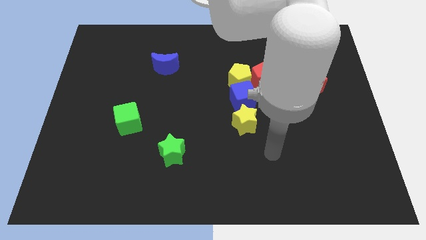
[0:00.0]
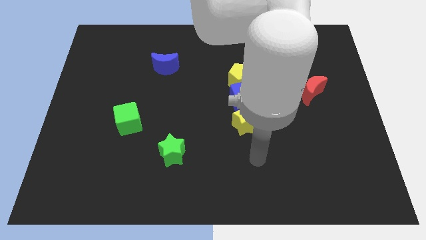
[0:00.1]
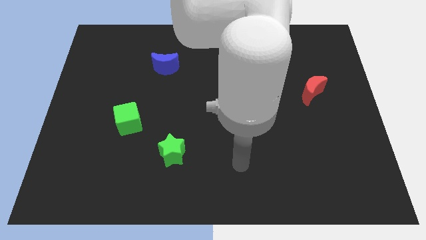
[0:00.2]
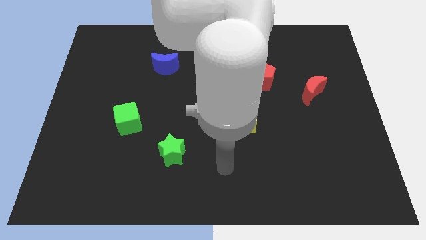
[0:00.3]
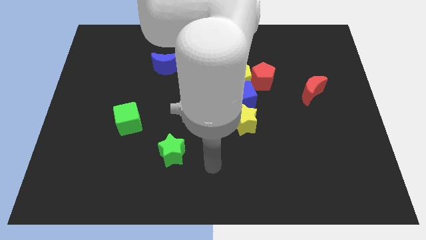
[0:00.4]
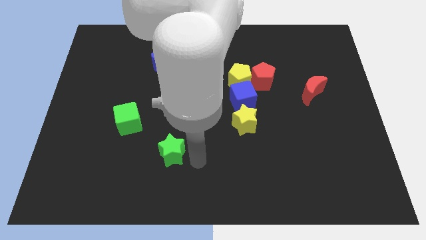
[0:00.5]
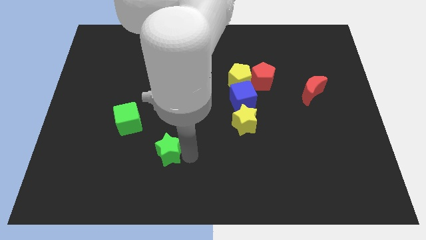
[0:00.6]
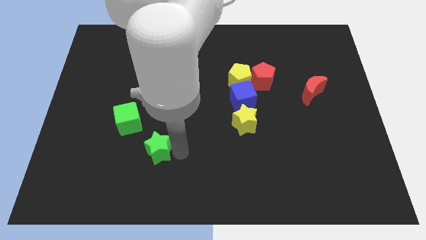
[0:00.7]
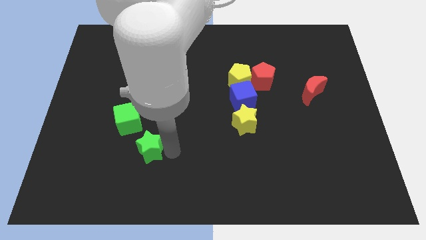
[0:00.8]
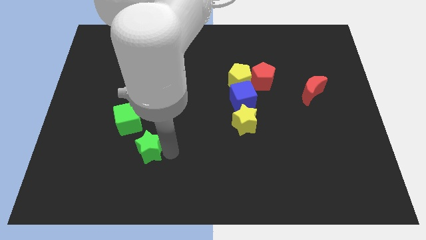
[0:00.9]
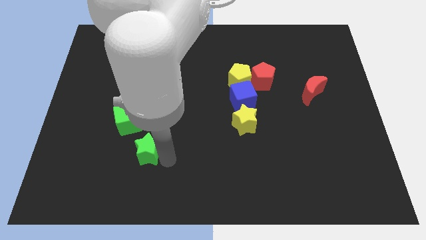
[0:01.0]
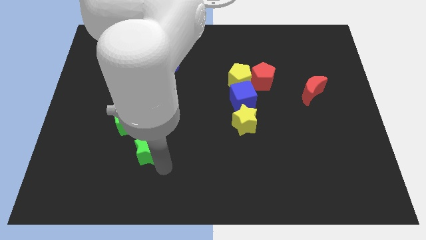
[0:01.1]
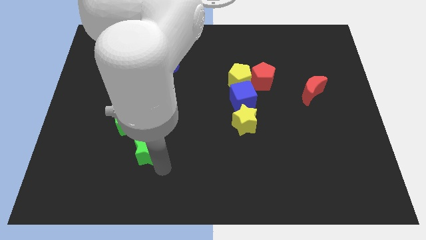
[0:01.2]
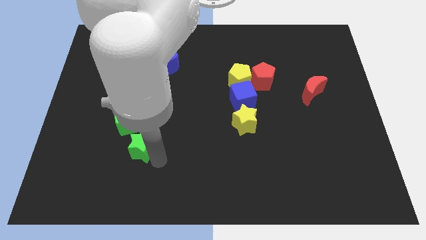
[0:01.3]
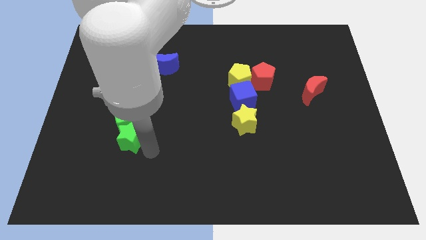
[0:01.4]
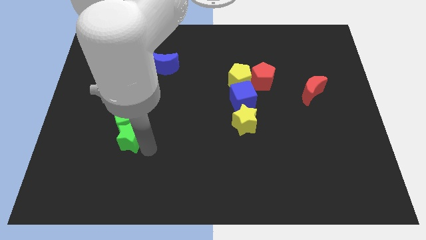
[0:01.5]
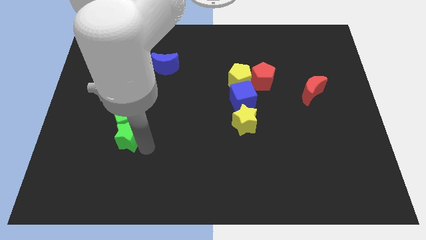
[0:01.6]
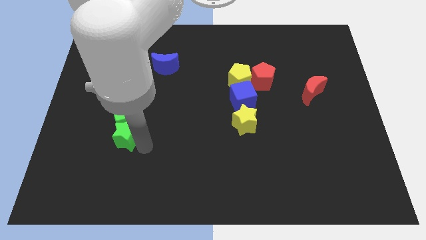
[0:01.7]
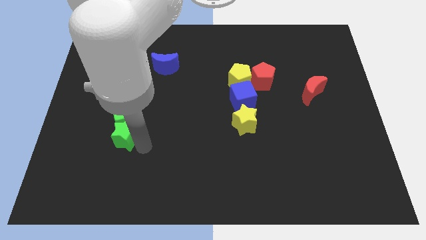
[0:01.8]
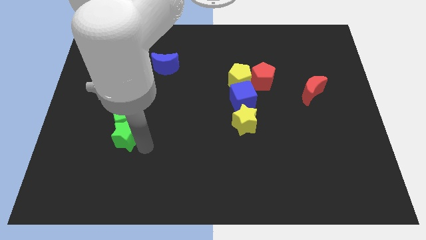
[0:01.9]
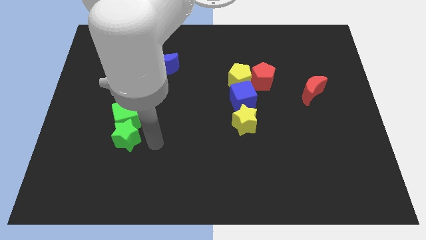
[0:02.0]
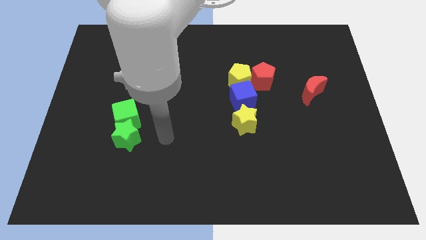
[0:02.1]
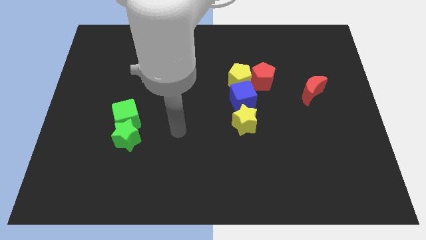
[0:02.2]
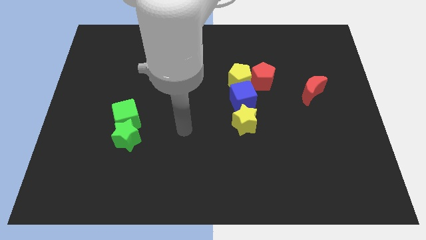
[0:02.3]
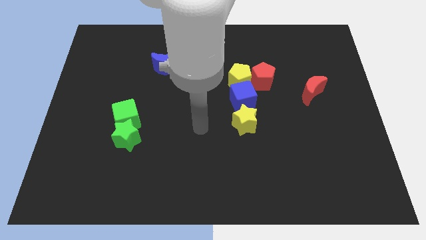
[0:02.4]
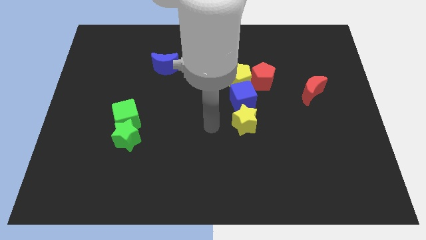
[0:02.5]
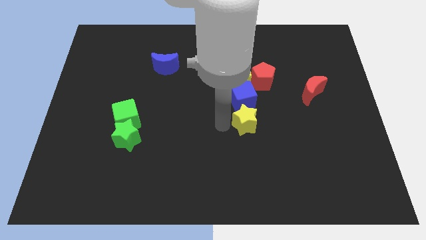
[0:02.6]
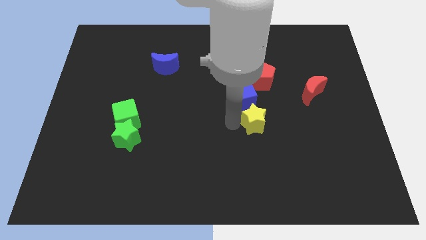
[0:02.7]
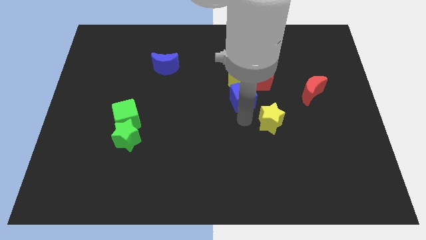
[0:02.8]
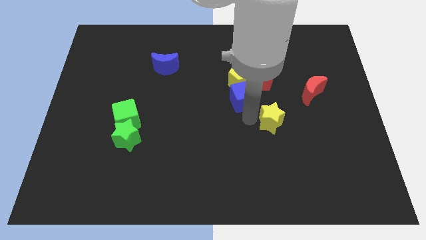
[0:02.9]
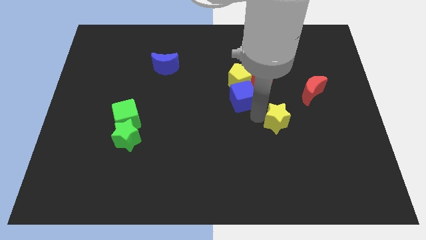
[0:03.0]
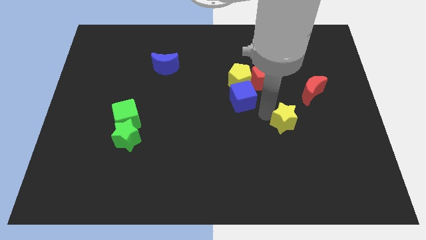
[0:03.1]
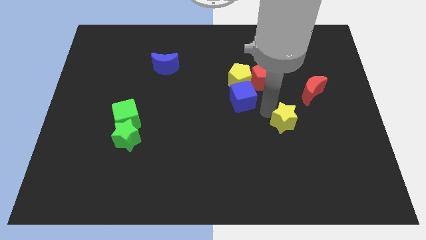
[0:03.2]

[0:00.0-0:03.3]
push the yellow star below the red pentagon

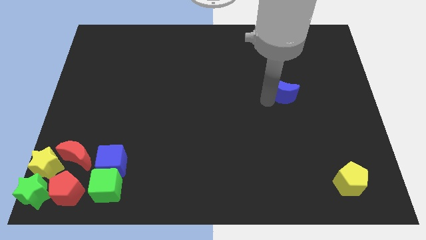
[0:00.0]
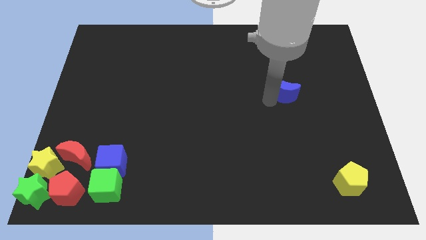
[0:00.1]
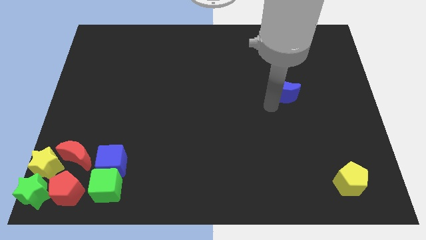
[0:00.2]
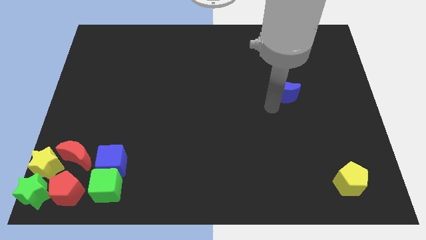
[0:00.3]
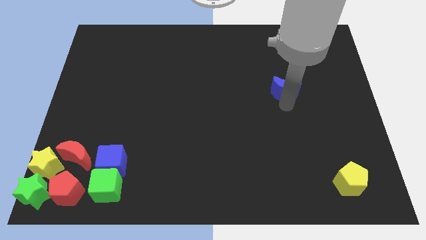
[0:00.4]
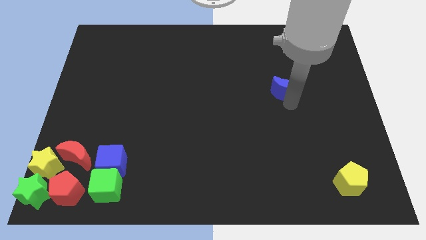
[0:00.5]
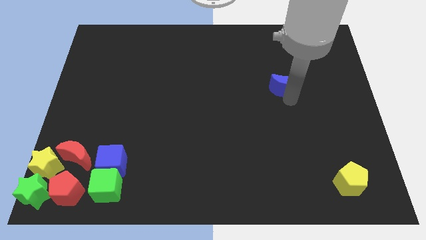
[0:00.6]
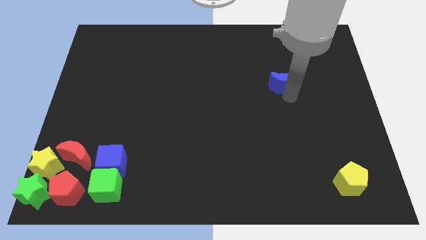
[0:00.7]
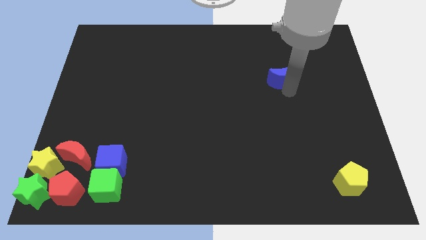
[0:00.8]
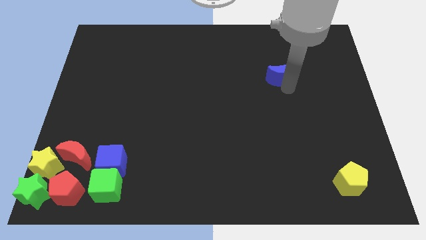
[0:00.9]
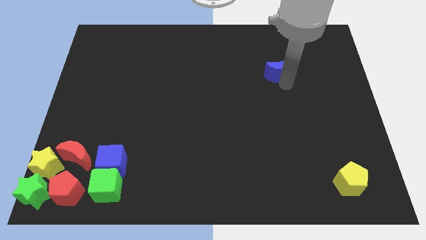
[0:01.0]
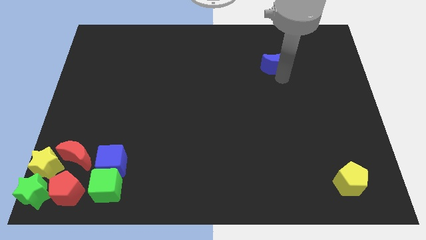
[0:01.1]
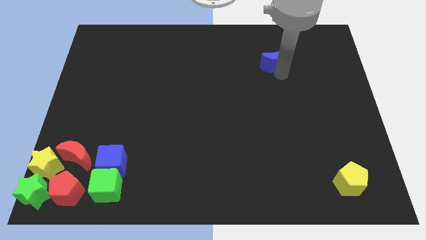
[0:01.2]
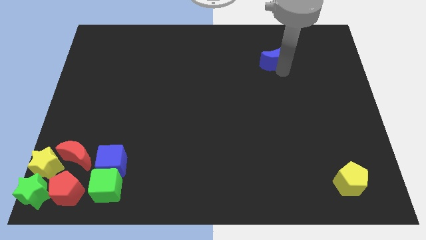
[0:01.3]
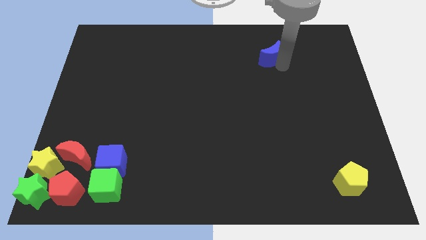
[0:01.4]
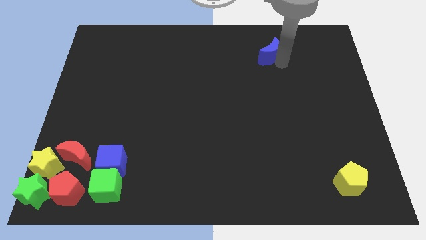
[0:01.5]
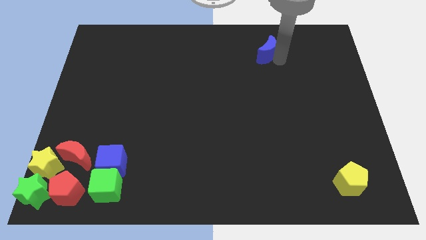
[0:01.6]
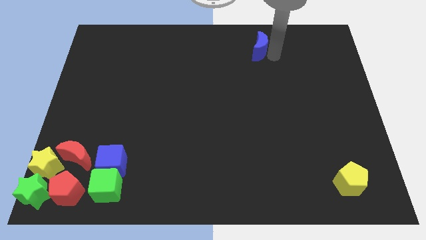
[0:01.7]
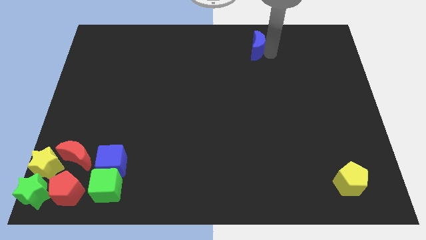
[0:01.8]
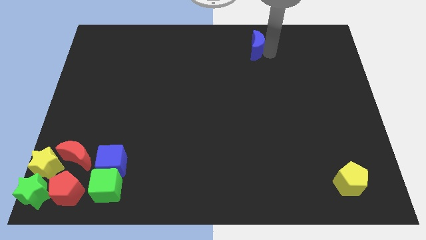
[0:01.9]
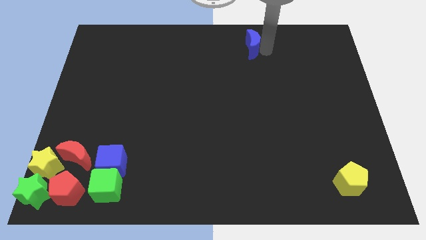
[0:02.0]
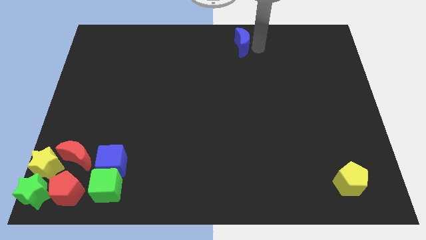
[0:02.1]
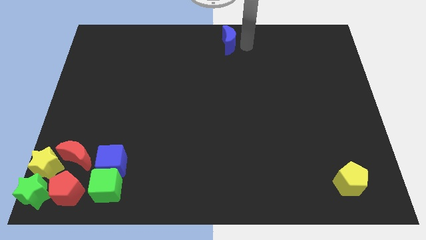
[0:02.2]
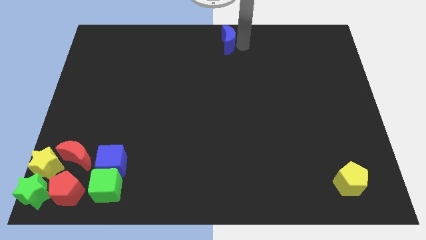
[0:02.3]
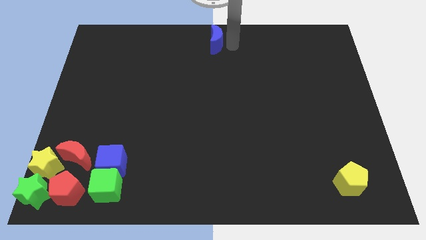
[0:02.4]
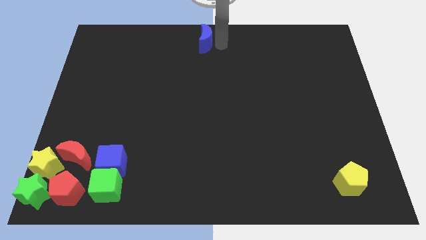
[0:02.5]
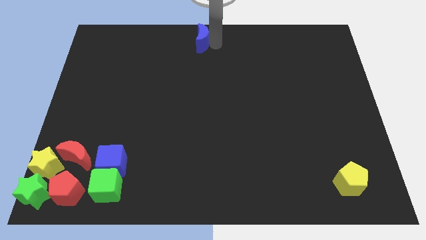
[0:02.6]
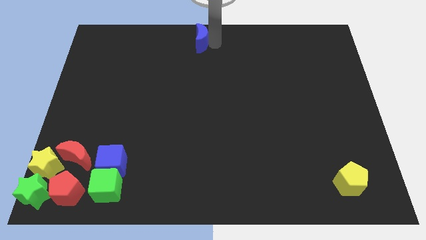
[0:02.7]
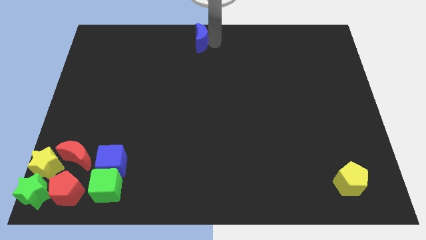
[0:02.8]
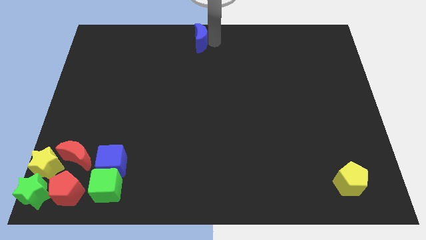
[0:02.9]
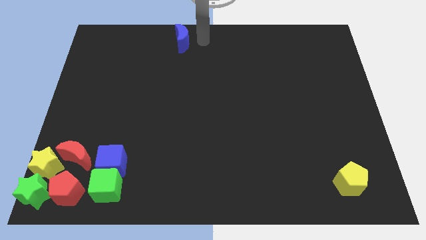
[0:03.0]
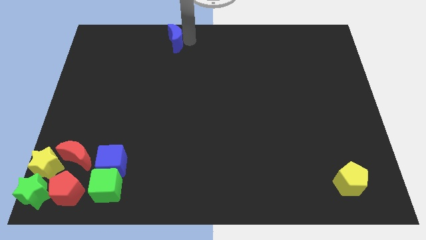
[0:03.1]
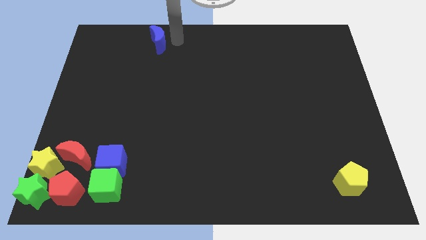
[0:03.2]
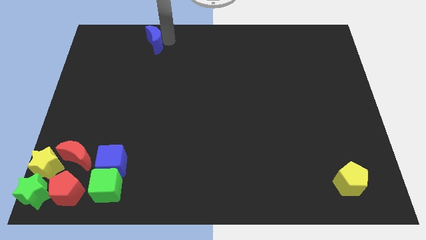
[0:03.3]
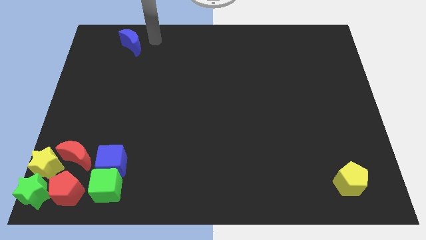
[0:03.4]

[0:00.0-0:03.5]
move the blue crescent towards the top left

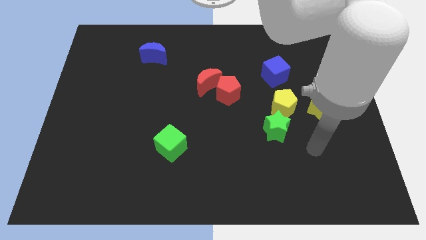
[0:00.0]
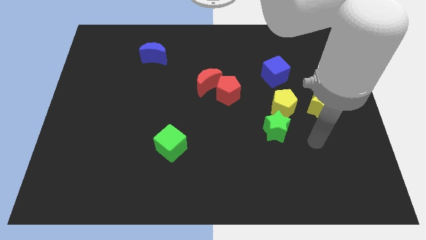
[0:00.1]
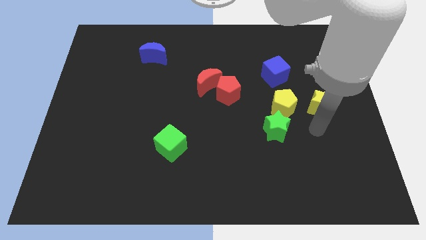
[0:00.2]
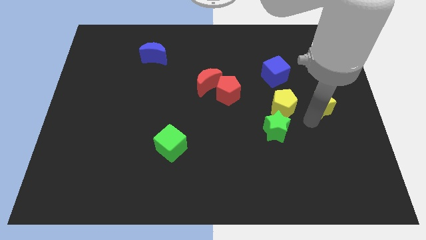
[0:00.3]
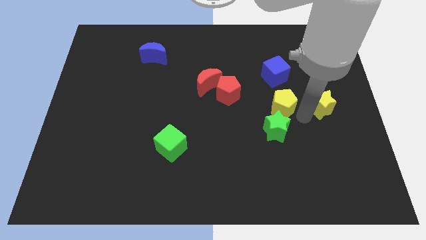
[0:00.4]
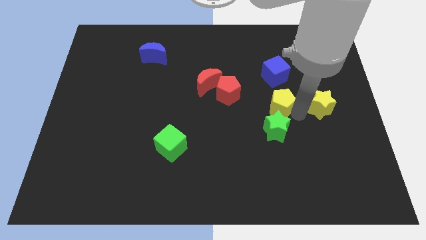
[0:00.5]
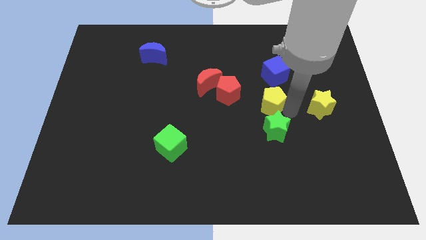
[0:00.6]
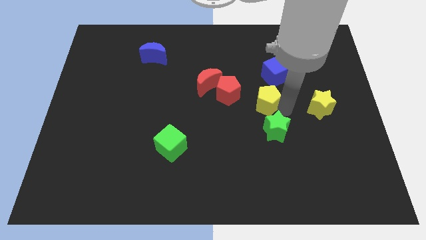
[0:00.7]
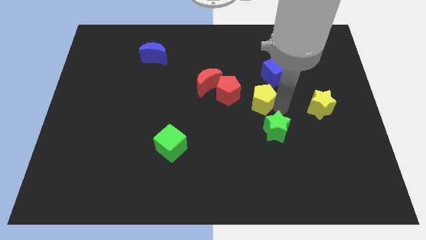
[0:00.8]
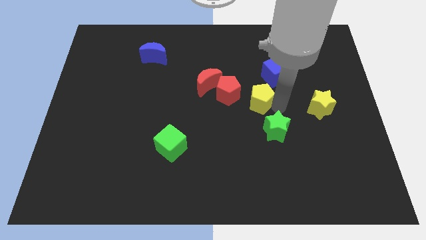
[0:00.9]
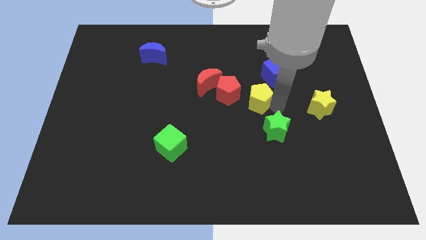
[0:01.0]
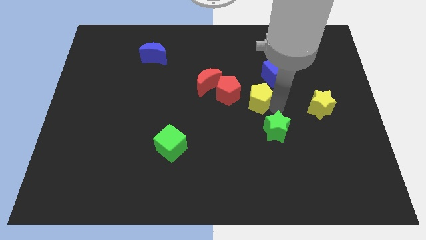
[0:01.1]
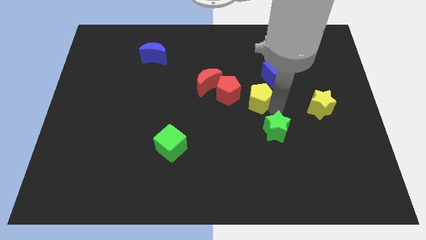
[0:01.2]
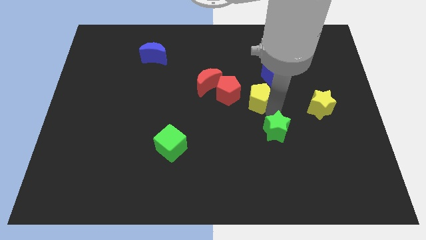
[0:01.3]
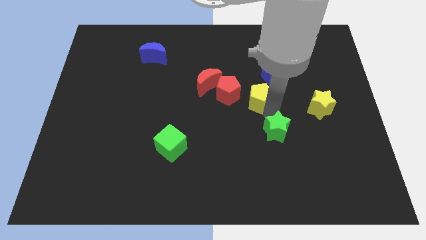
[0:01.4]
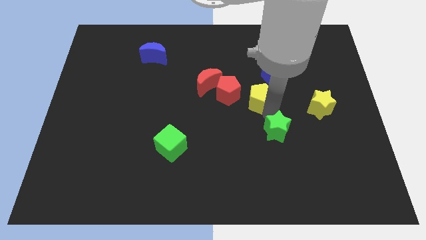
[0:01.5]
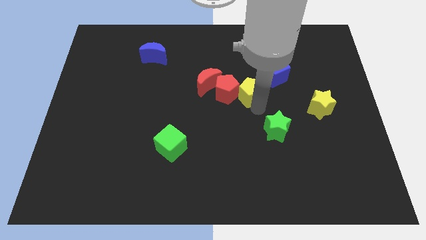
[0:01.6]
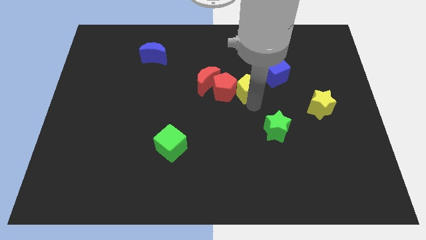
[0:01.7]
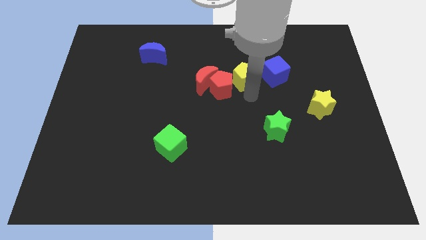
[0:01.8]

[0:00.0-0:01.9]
push the yellow pentagon into the red pentagon

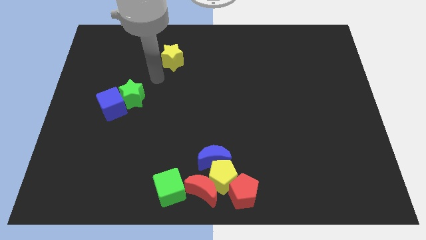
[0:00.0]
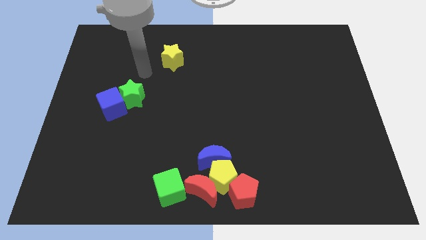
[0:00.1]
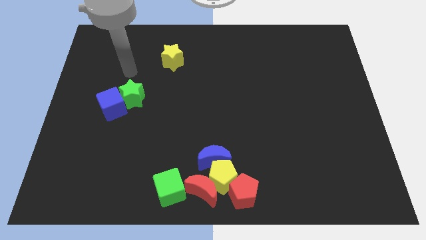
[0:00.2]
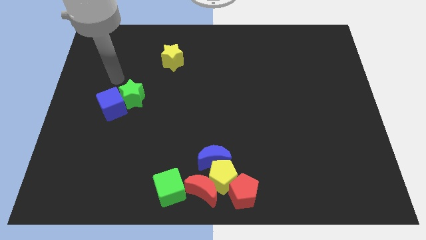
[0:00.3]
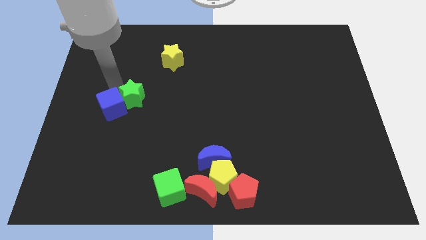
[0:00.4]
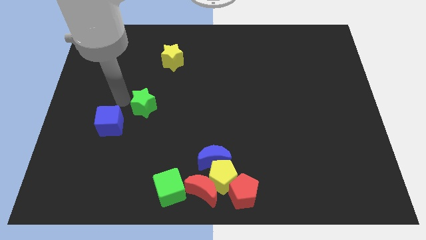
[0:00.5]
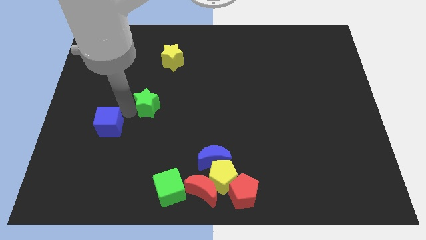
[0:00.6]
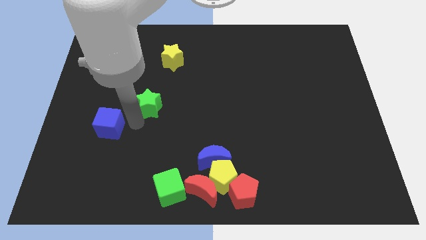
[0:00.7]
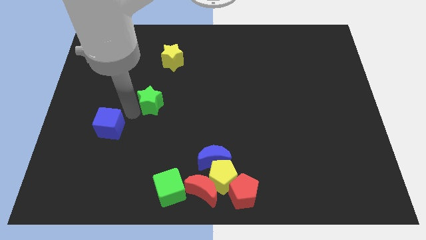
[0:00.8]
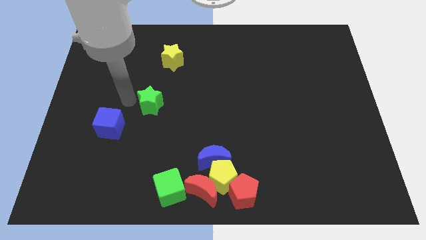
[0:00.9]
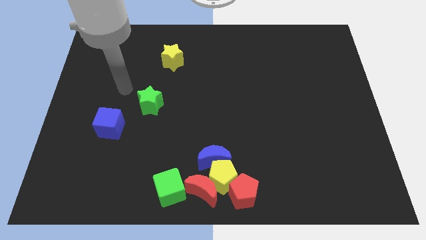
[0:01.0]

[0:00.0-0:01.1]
separate the green star from blue cube
